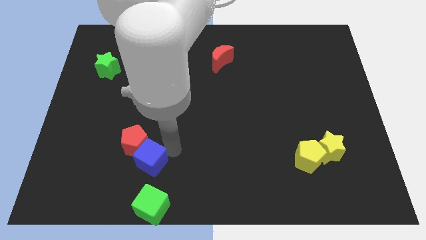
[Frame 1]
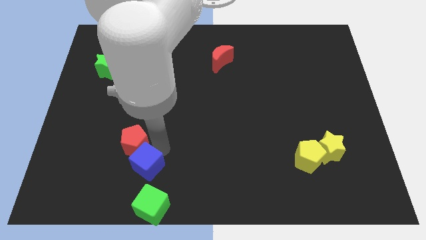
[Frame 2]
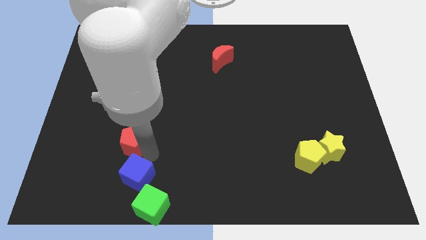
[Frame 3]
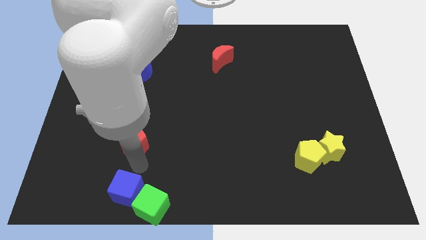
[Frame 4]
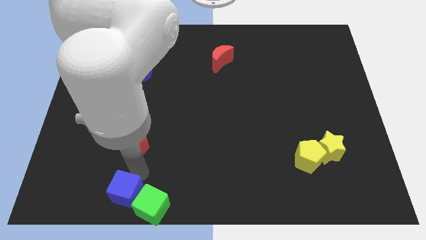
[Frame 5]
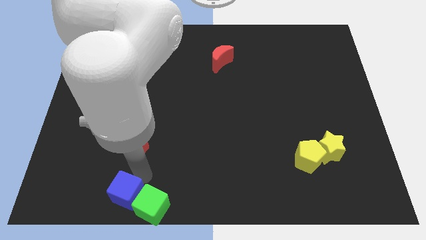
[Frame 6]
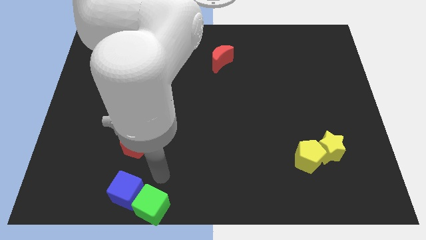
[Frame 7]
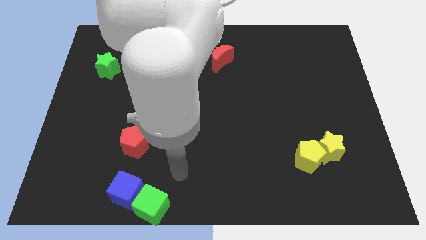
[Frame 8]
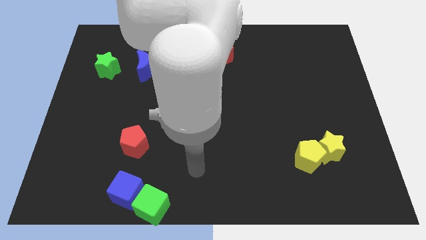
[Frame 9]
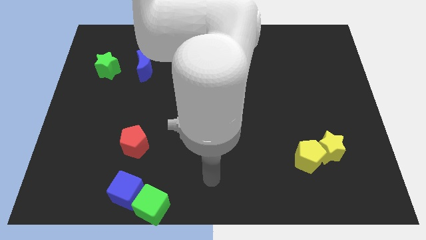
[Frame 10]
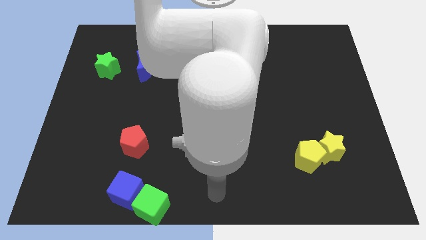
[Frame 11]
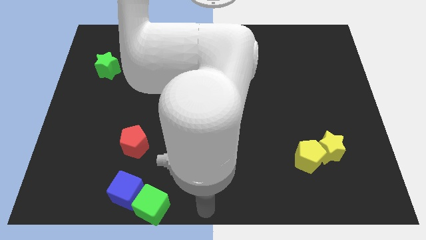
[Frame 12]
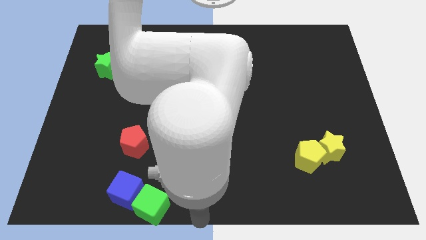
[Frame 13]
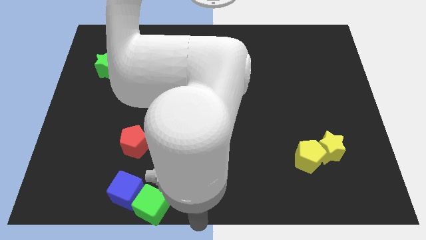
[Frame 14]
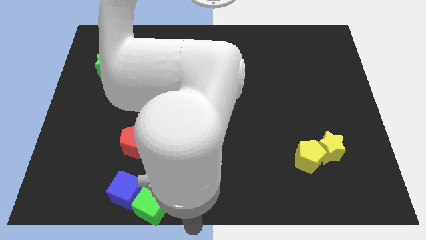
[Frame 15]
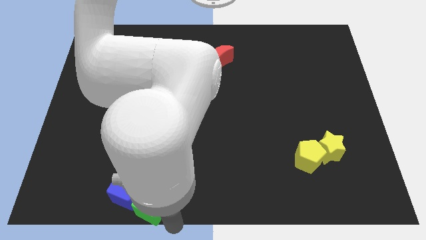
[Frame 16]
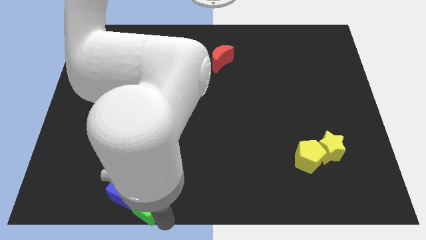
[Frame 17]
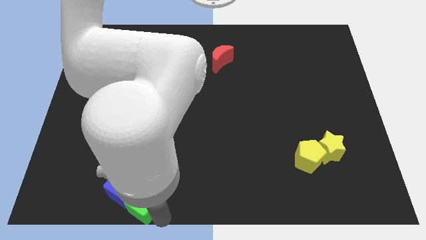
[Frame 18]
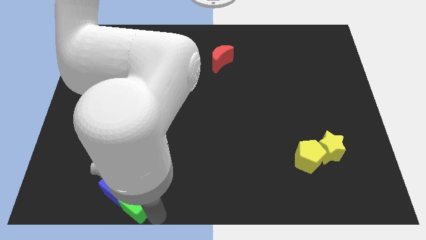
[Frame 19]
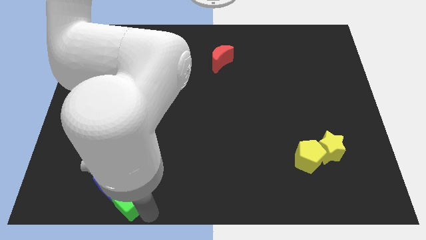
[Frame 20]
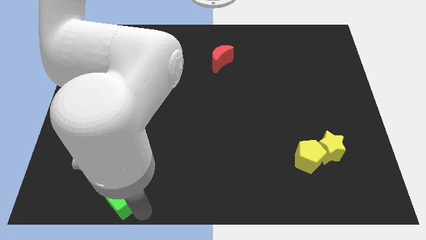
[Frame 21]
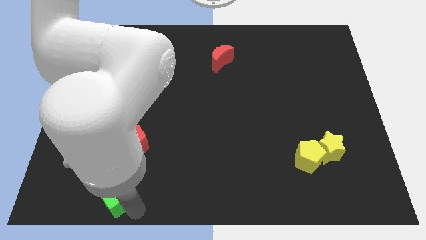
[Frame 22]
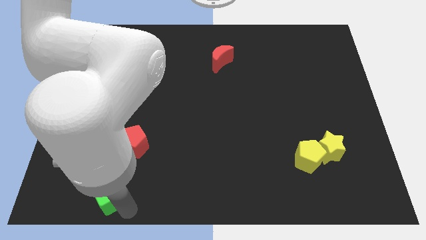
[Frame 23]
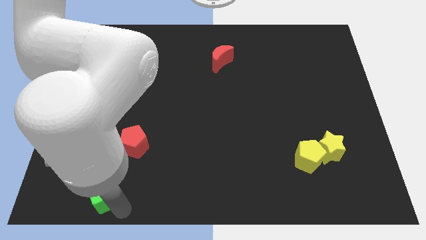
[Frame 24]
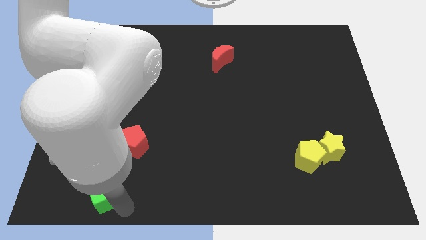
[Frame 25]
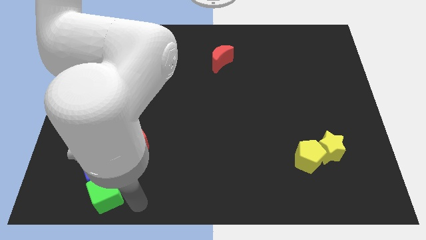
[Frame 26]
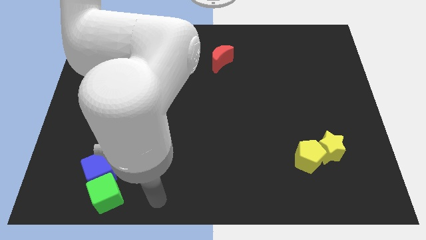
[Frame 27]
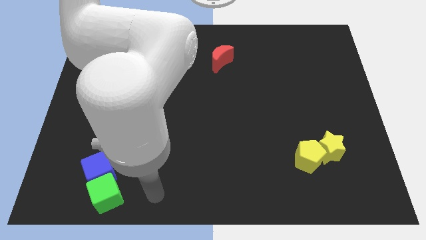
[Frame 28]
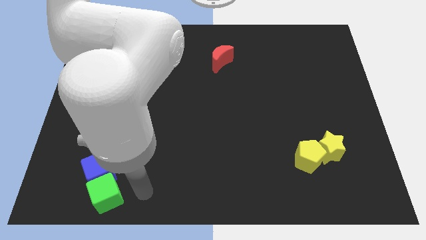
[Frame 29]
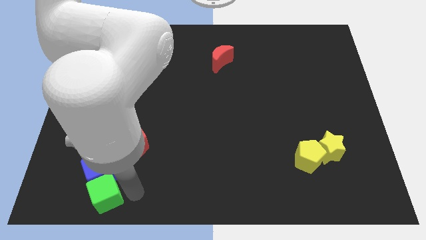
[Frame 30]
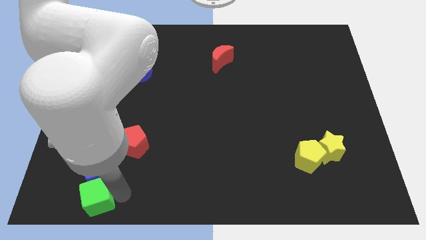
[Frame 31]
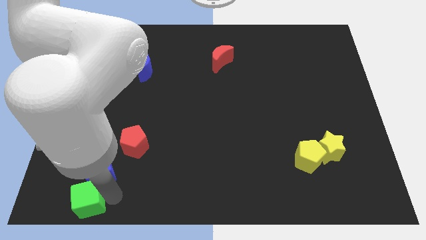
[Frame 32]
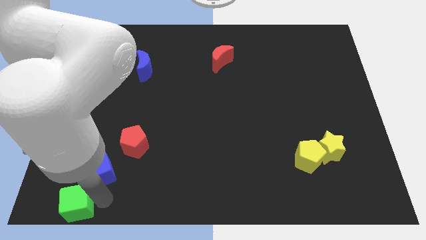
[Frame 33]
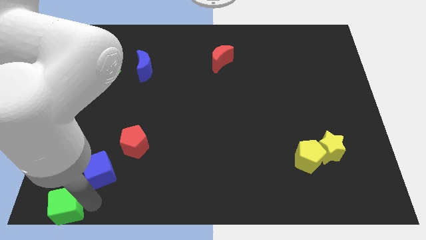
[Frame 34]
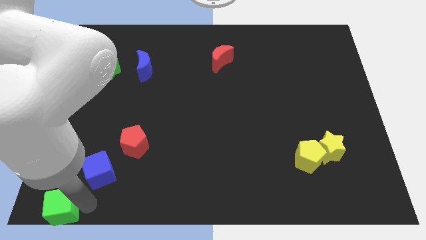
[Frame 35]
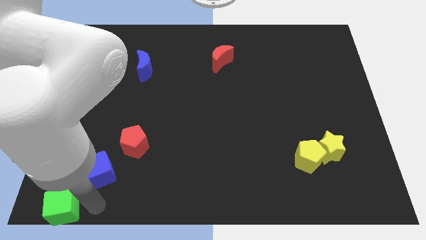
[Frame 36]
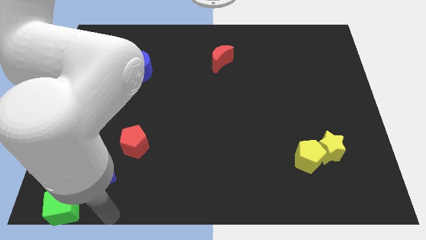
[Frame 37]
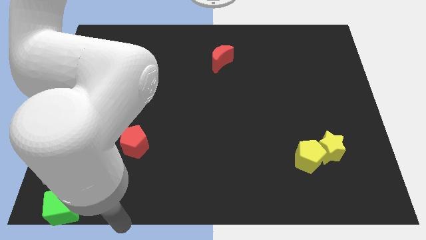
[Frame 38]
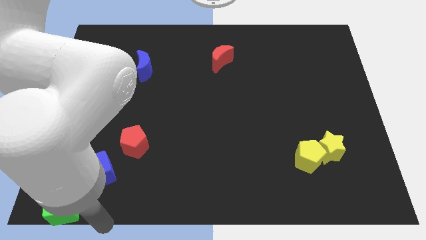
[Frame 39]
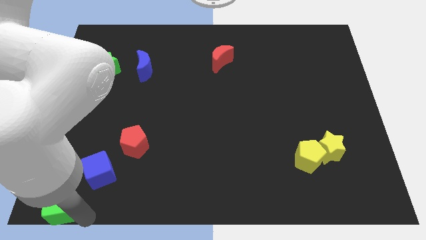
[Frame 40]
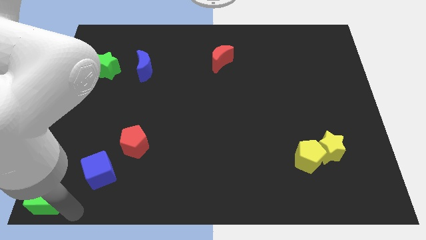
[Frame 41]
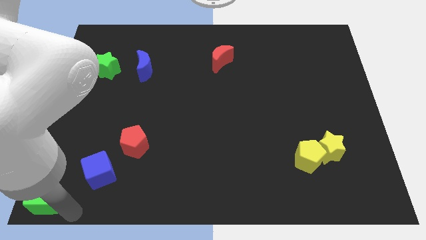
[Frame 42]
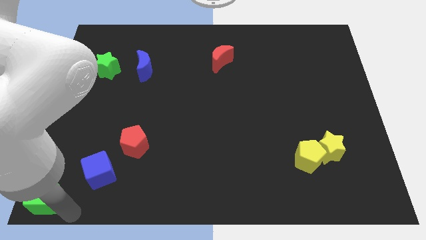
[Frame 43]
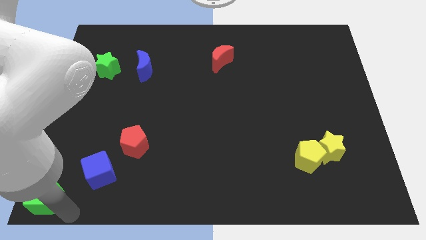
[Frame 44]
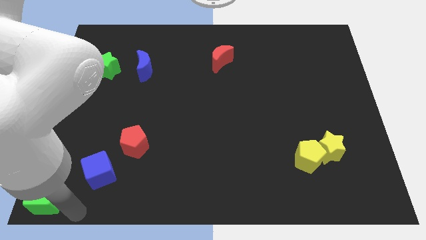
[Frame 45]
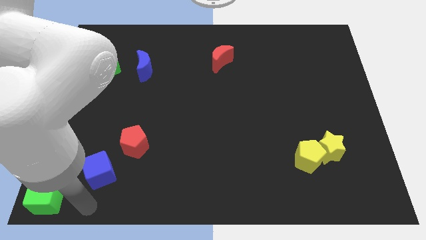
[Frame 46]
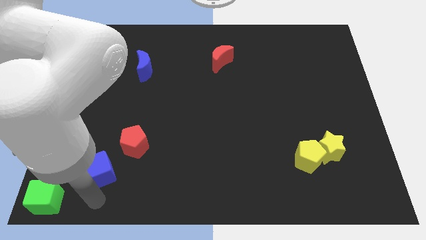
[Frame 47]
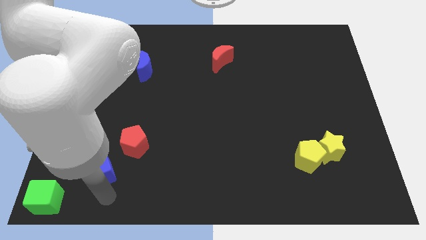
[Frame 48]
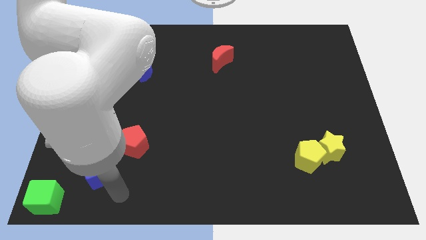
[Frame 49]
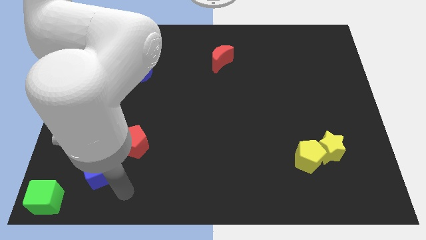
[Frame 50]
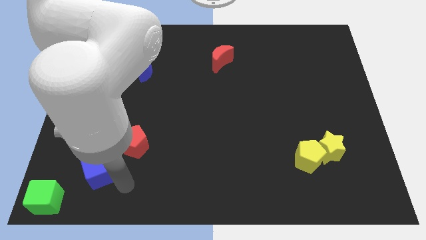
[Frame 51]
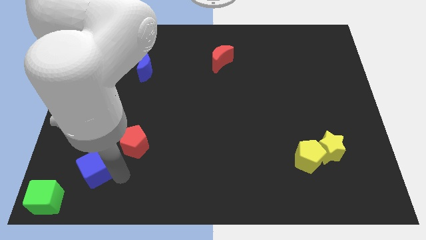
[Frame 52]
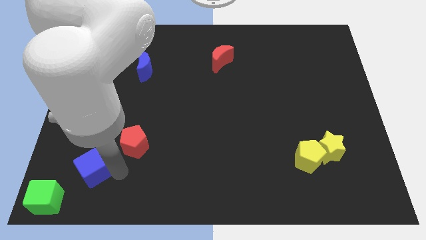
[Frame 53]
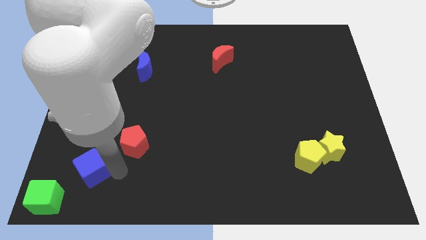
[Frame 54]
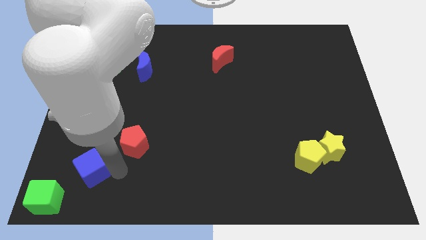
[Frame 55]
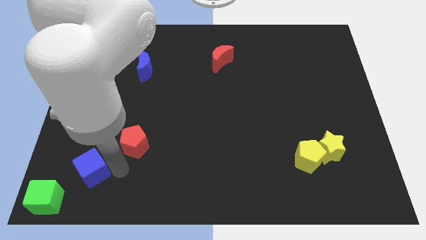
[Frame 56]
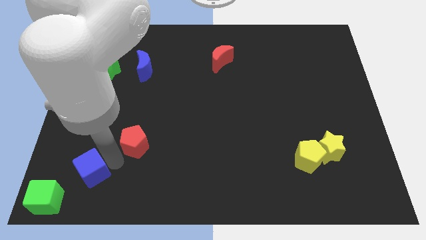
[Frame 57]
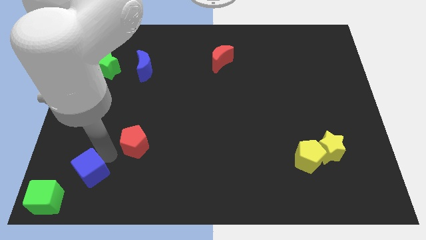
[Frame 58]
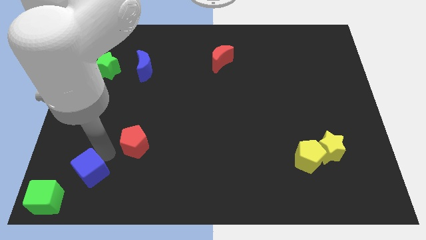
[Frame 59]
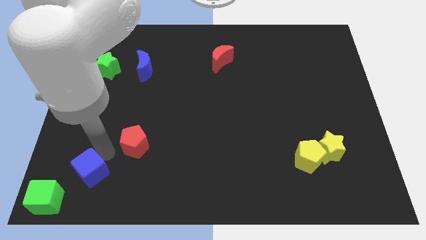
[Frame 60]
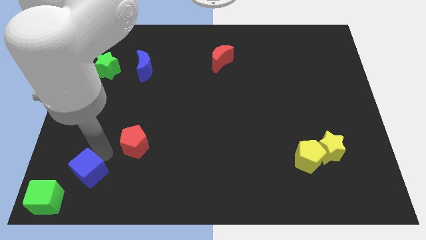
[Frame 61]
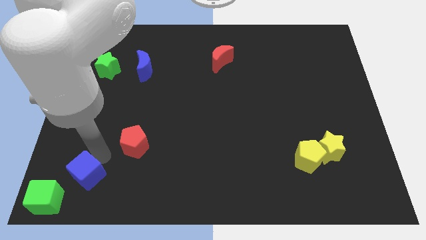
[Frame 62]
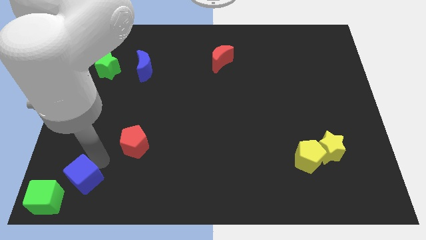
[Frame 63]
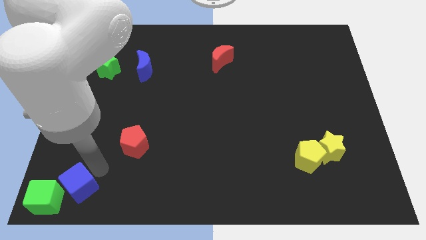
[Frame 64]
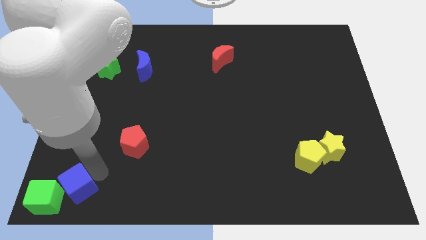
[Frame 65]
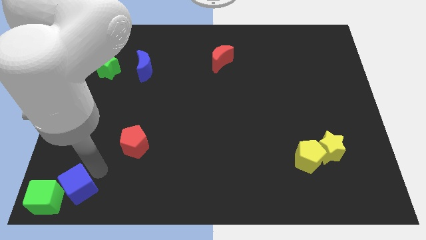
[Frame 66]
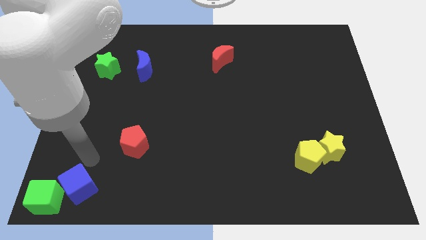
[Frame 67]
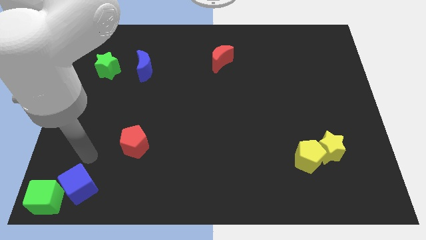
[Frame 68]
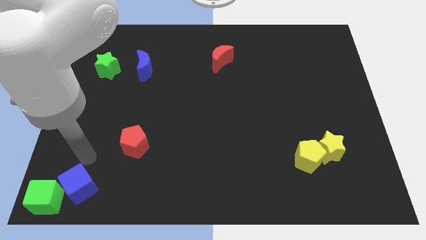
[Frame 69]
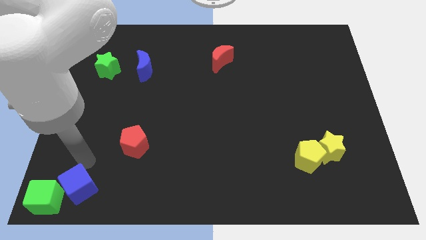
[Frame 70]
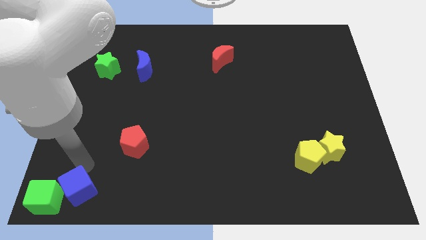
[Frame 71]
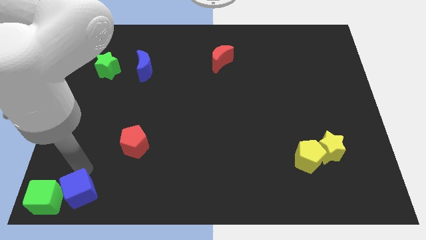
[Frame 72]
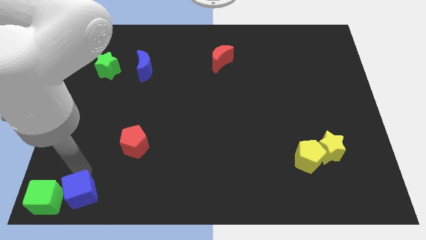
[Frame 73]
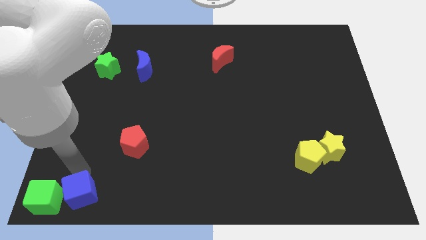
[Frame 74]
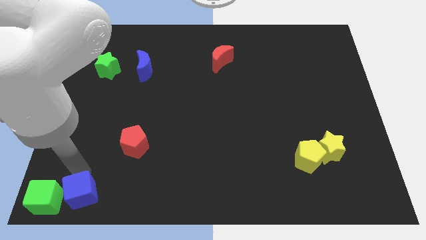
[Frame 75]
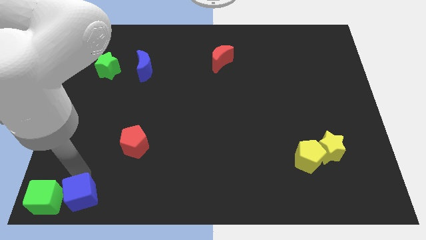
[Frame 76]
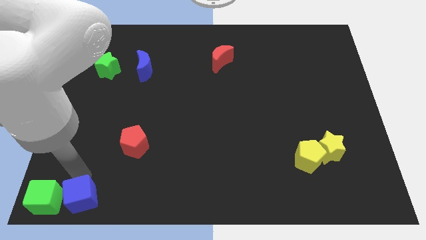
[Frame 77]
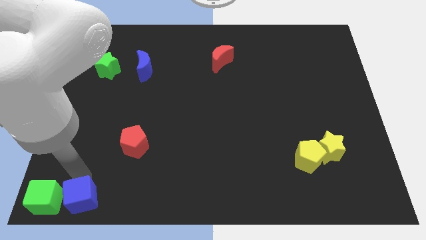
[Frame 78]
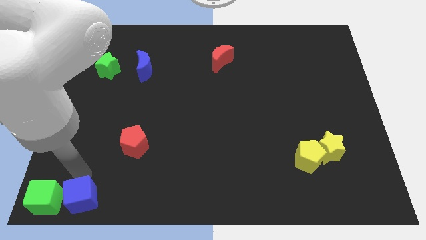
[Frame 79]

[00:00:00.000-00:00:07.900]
adjust the blue cube to the left side of the green cube

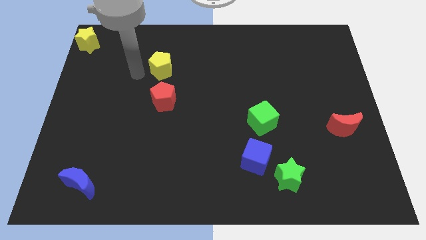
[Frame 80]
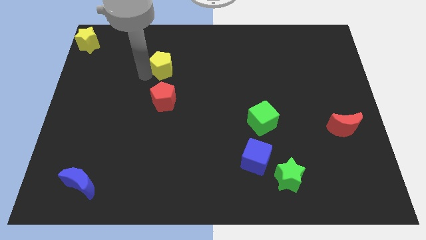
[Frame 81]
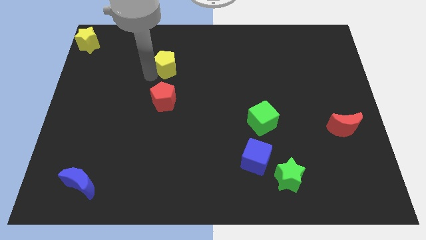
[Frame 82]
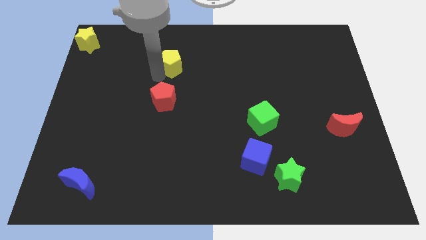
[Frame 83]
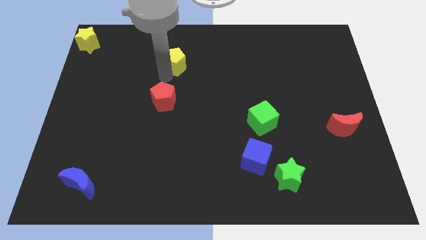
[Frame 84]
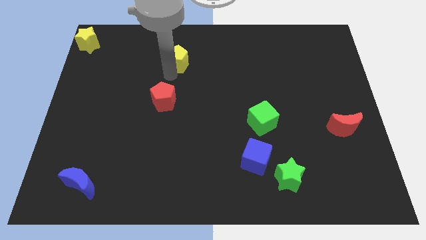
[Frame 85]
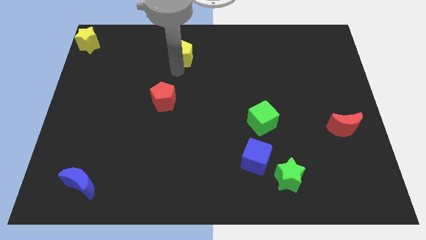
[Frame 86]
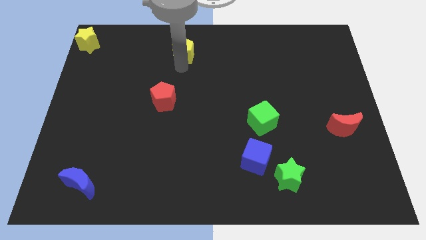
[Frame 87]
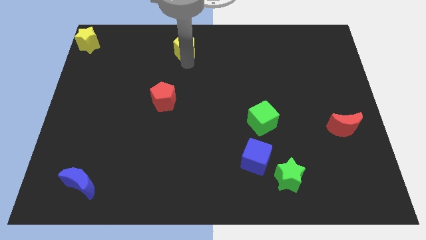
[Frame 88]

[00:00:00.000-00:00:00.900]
place your arm between yellow pentagon and red pentagon

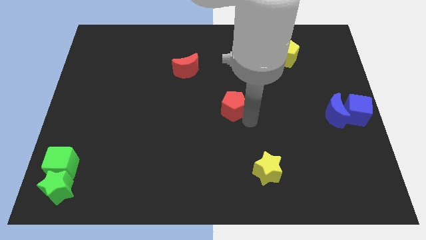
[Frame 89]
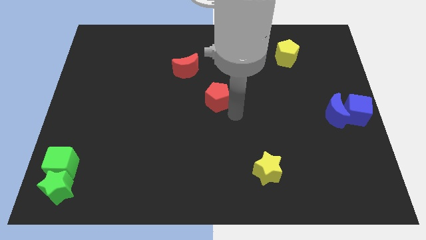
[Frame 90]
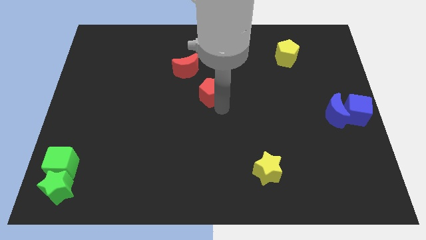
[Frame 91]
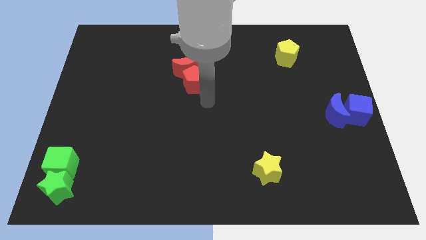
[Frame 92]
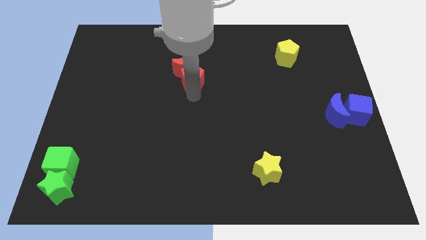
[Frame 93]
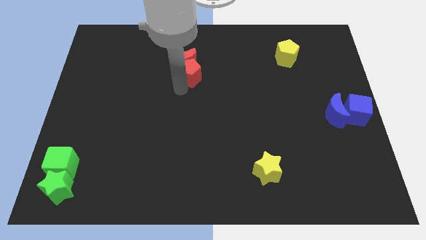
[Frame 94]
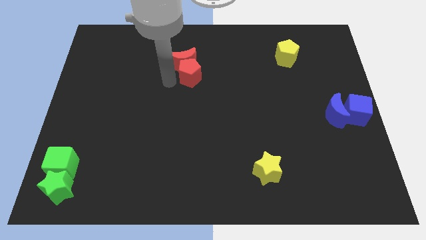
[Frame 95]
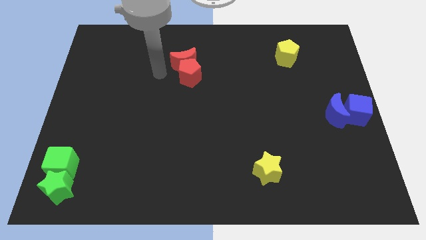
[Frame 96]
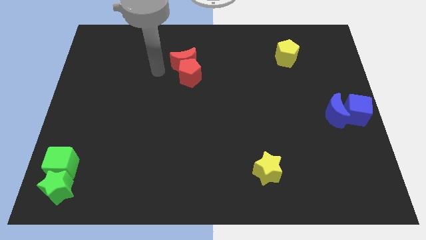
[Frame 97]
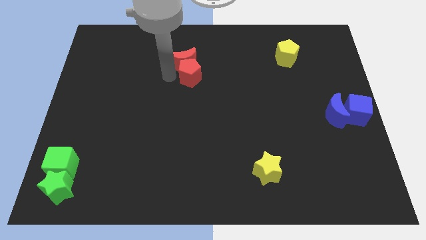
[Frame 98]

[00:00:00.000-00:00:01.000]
push the red pentagon into the red moon
